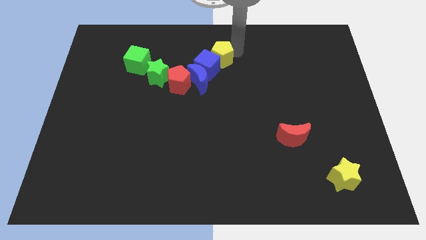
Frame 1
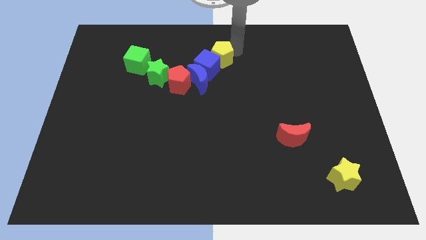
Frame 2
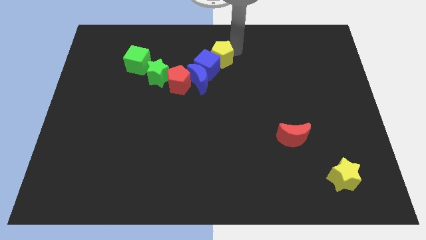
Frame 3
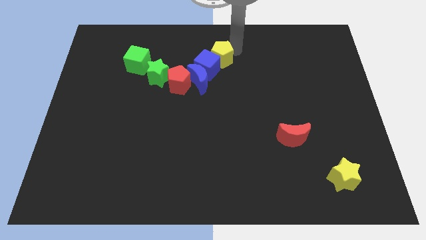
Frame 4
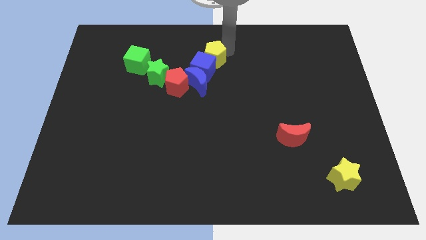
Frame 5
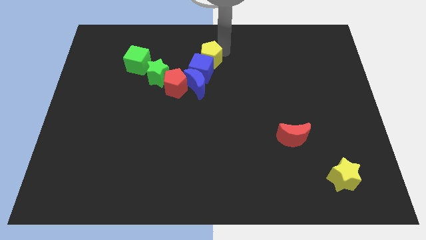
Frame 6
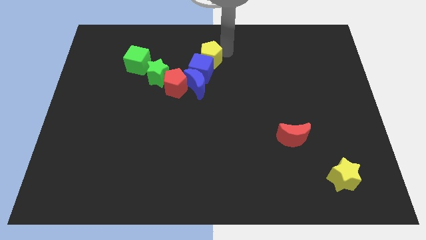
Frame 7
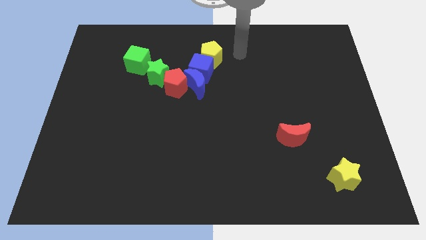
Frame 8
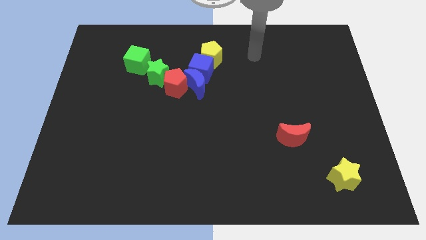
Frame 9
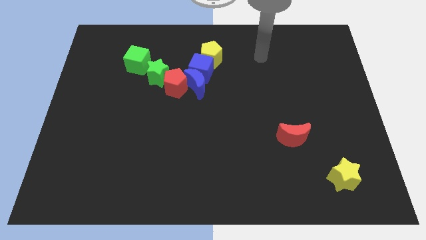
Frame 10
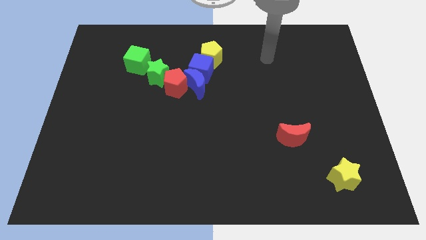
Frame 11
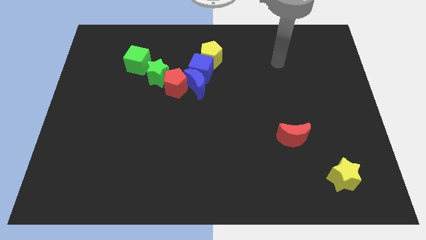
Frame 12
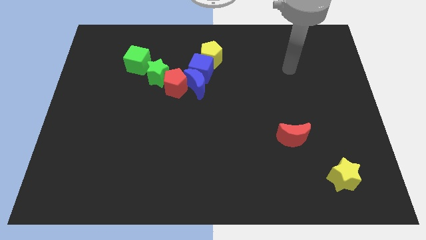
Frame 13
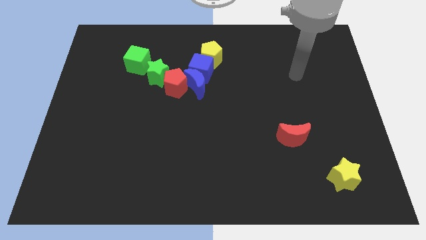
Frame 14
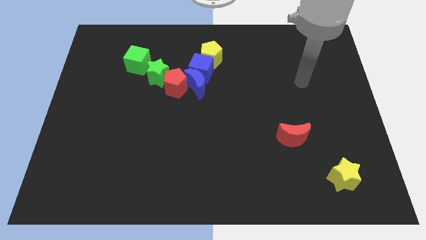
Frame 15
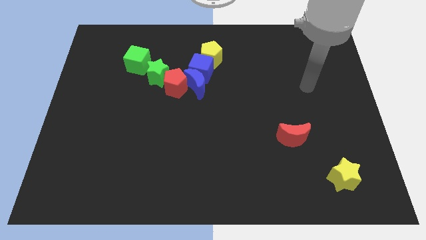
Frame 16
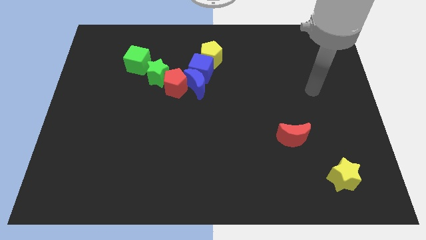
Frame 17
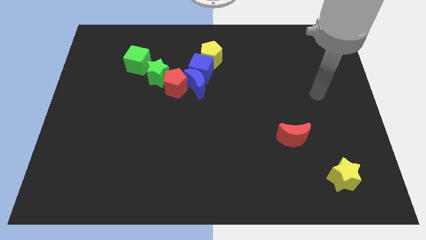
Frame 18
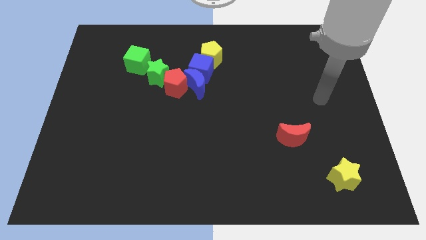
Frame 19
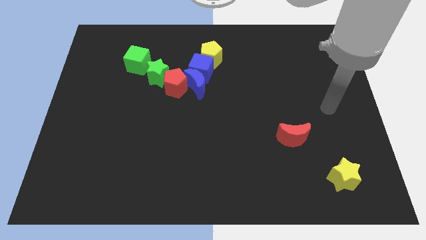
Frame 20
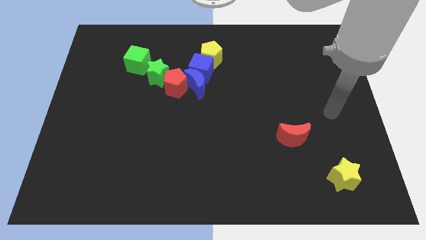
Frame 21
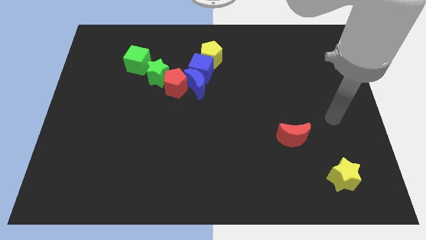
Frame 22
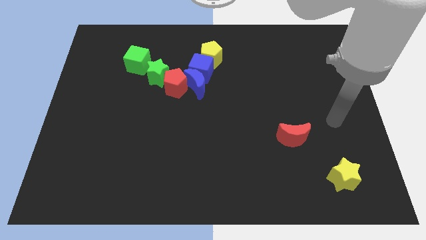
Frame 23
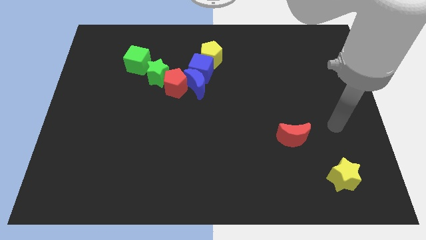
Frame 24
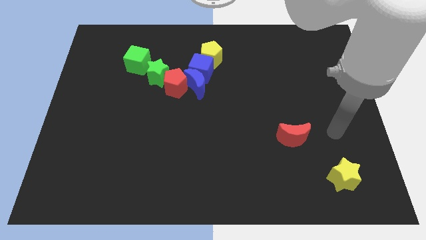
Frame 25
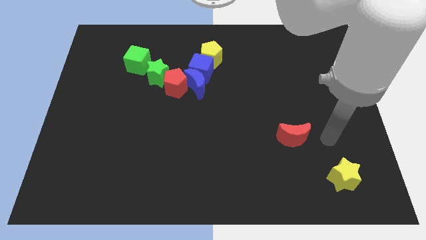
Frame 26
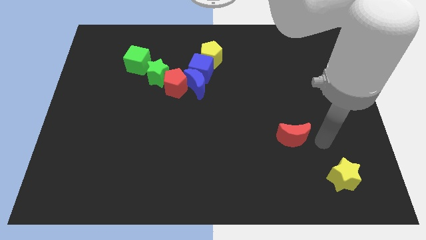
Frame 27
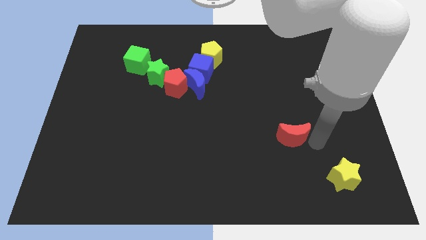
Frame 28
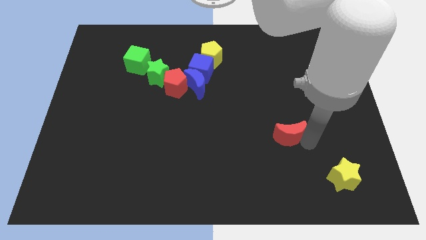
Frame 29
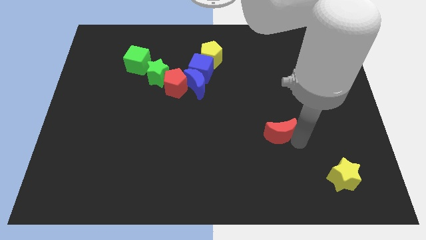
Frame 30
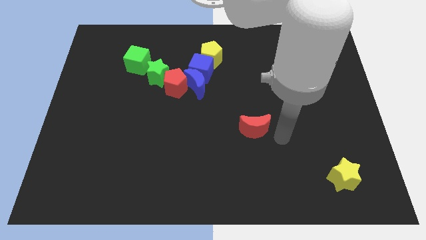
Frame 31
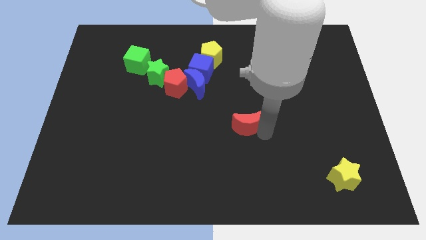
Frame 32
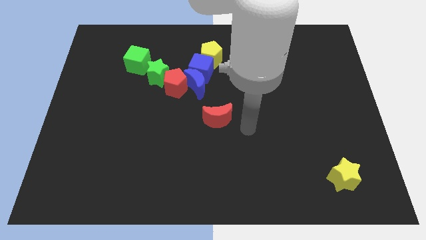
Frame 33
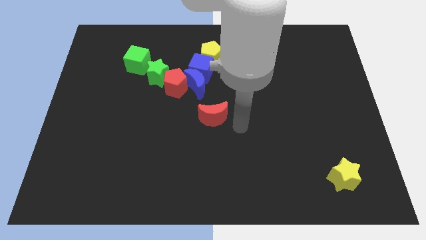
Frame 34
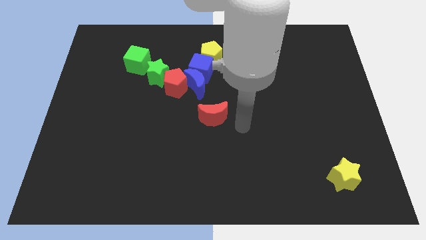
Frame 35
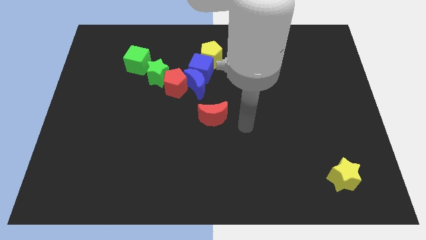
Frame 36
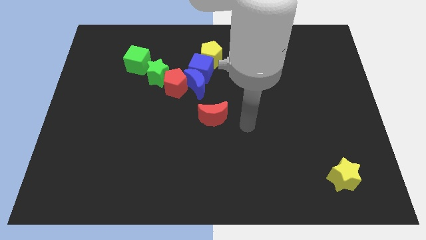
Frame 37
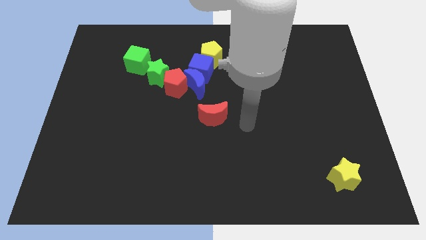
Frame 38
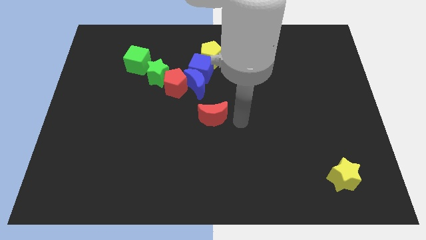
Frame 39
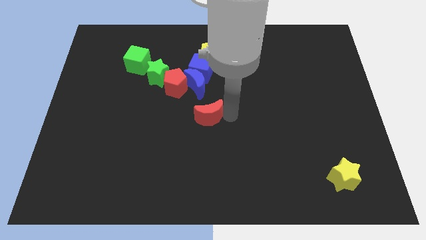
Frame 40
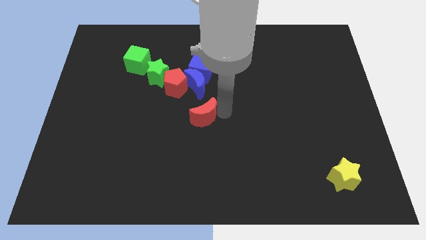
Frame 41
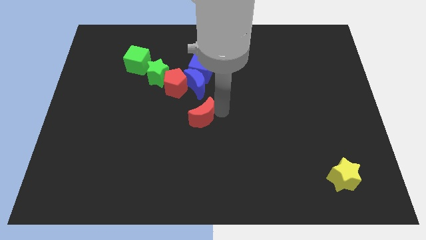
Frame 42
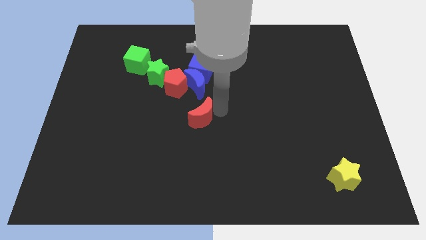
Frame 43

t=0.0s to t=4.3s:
push the red crescent upwards

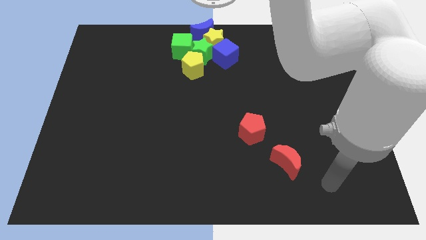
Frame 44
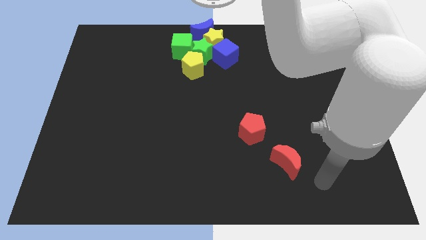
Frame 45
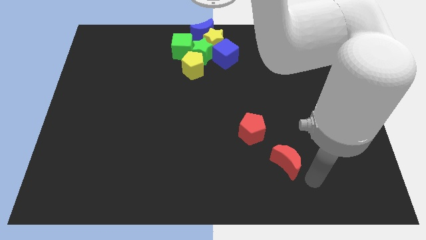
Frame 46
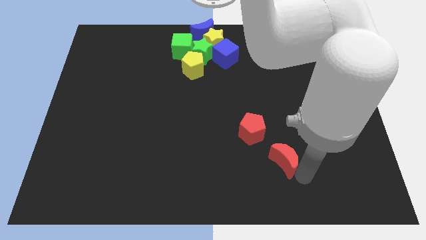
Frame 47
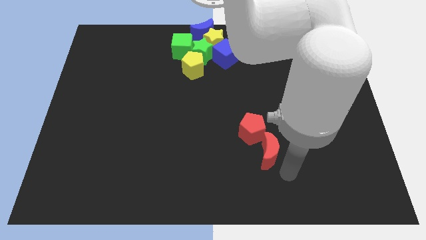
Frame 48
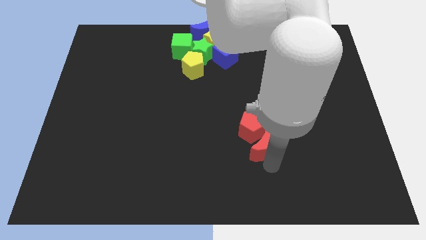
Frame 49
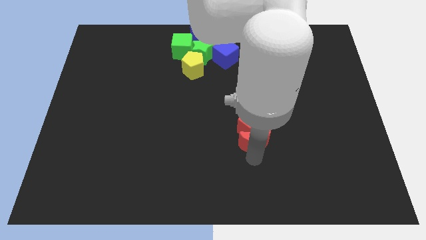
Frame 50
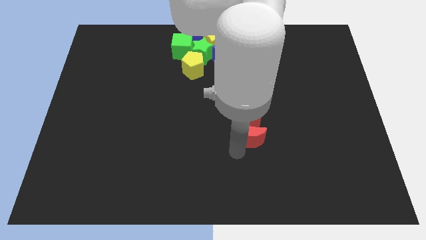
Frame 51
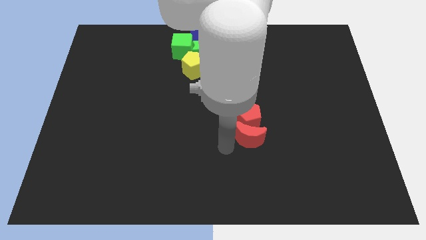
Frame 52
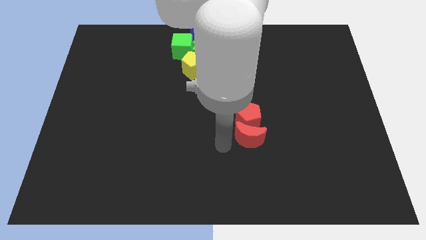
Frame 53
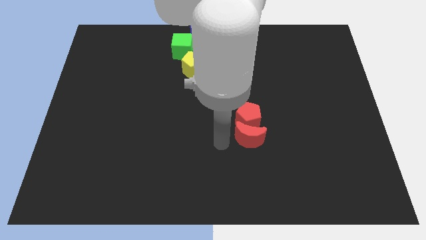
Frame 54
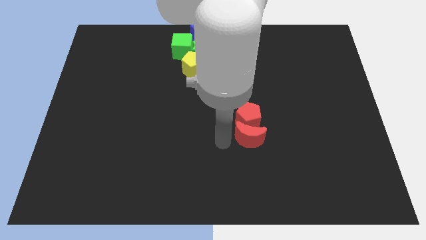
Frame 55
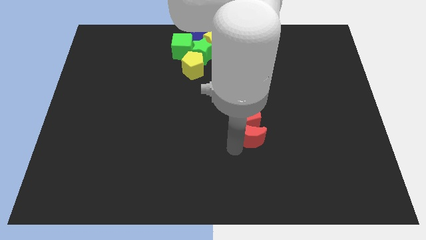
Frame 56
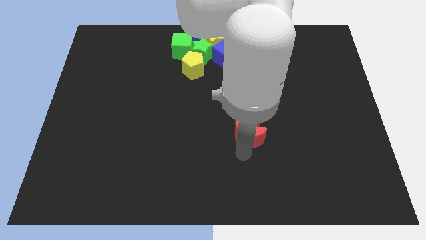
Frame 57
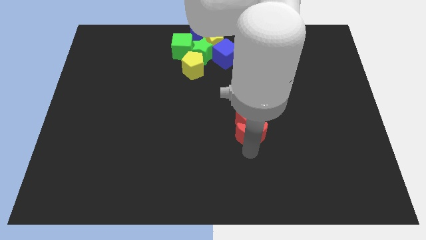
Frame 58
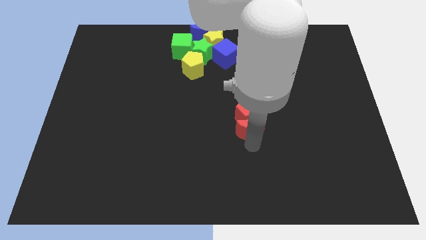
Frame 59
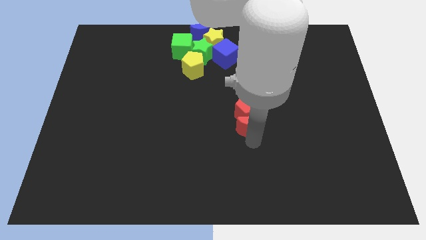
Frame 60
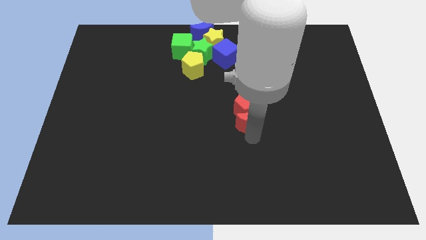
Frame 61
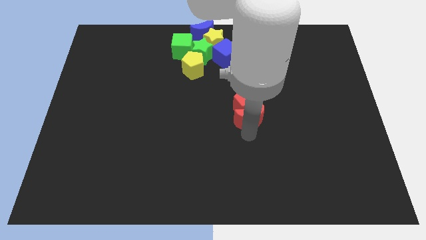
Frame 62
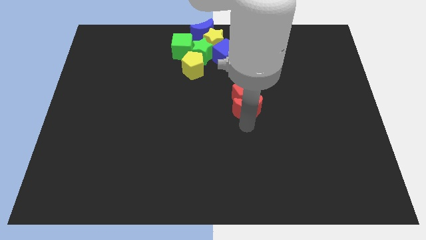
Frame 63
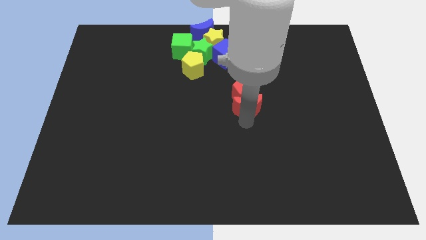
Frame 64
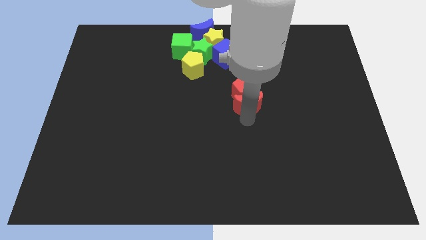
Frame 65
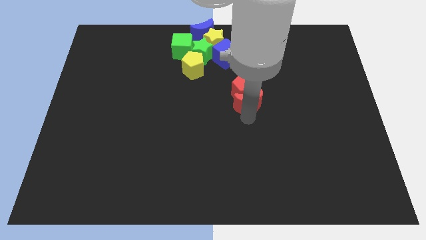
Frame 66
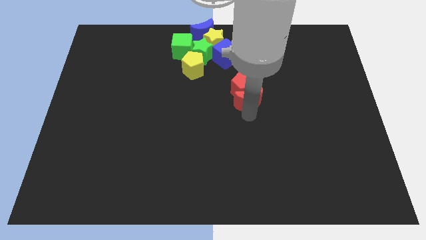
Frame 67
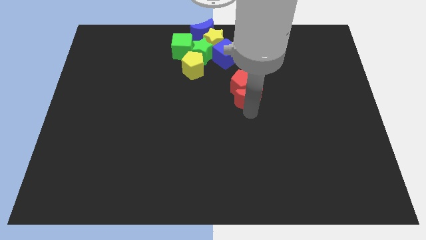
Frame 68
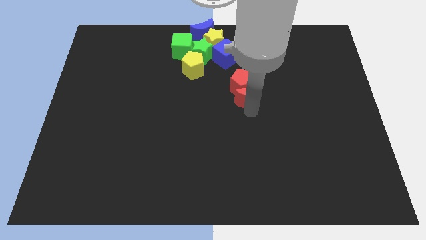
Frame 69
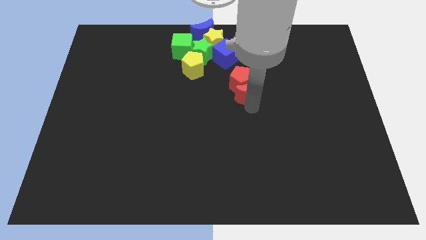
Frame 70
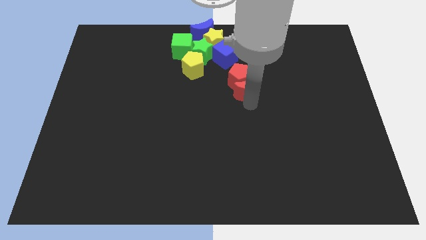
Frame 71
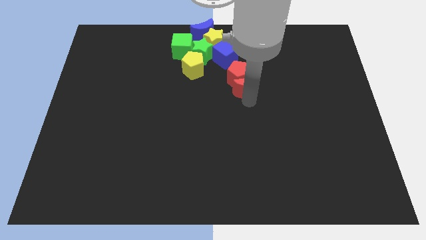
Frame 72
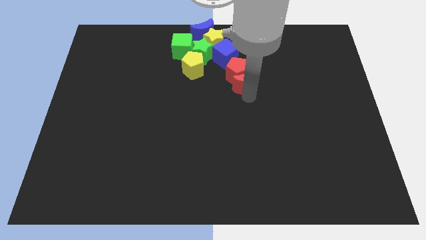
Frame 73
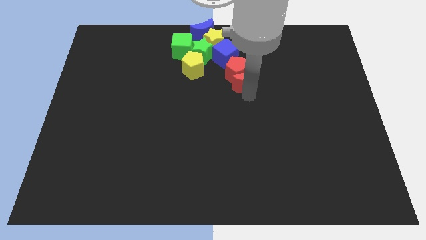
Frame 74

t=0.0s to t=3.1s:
push the red blocks into the blue cube

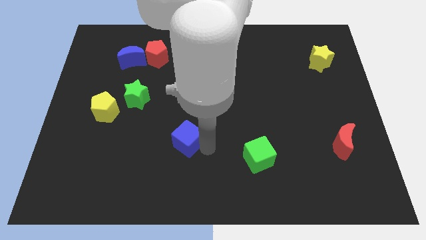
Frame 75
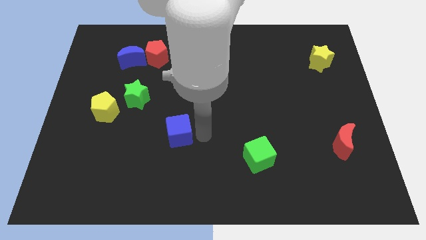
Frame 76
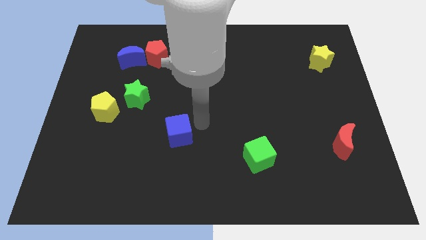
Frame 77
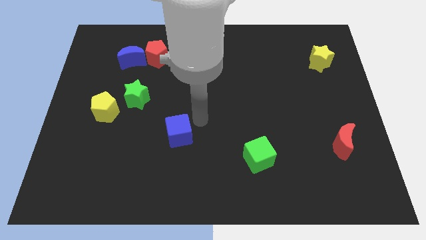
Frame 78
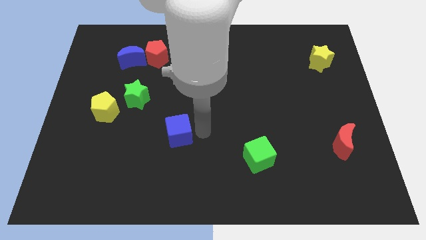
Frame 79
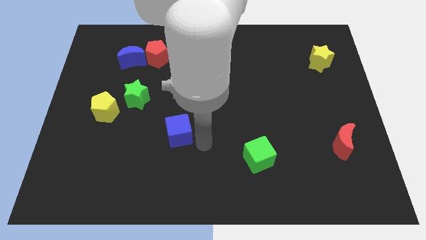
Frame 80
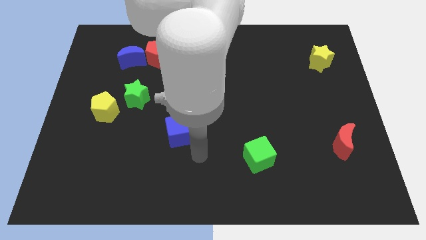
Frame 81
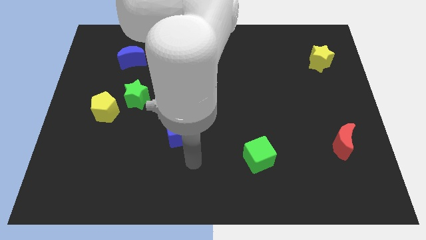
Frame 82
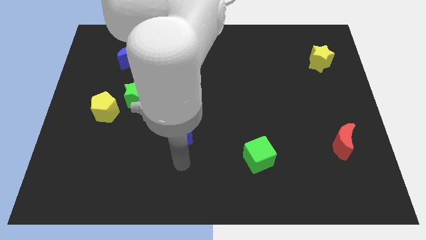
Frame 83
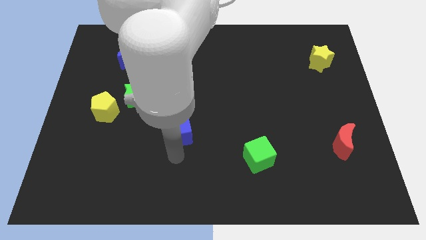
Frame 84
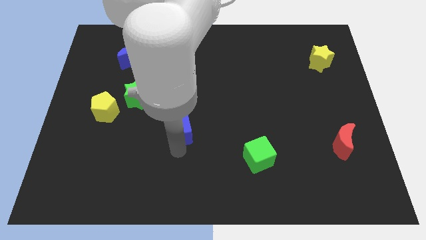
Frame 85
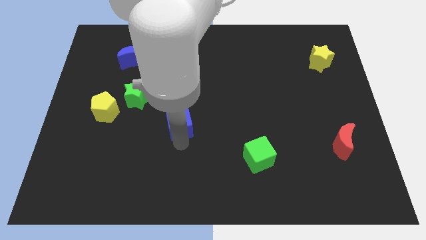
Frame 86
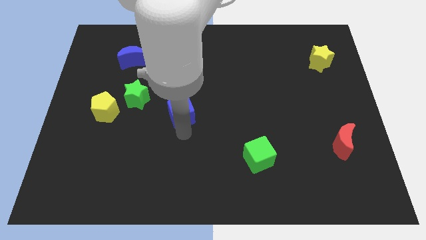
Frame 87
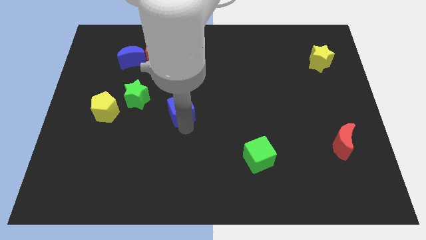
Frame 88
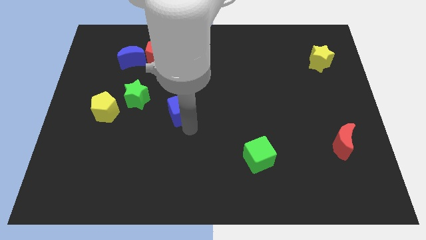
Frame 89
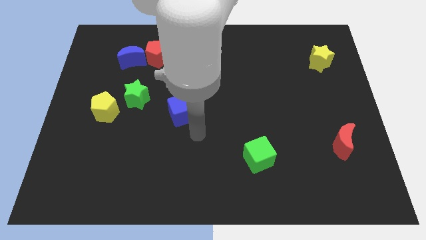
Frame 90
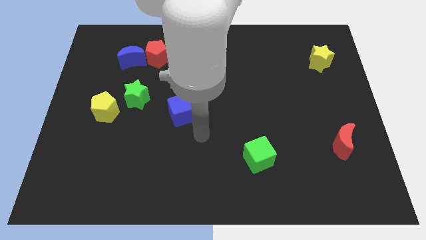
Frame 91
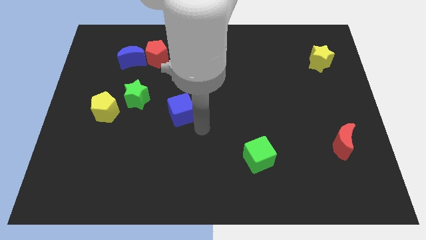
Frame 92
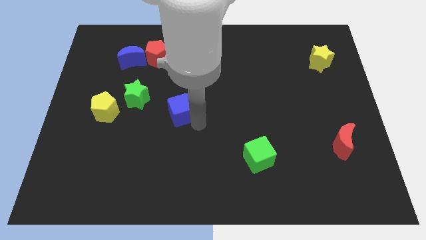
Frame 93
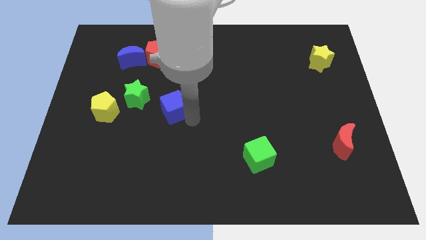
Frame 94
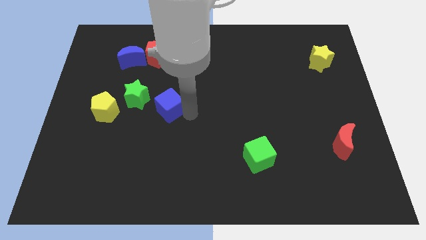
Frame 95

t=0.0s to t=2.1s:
push the blue cube towards the top side of the board
